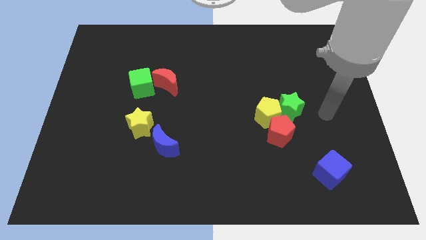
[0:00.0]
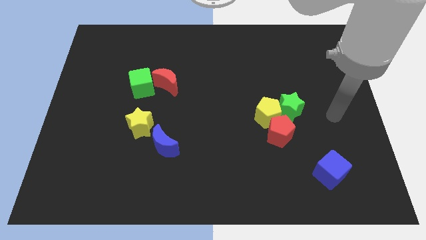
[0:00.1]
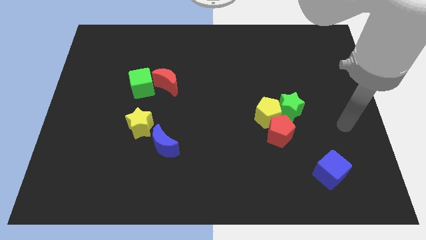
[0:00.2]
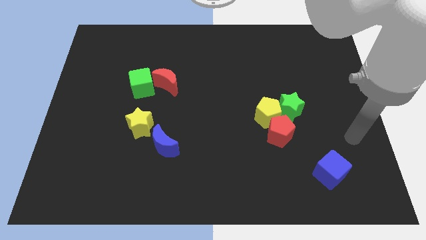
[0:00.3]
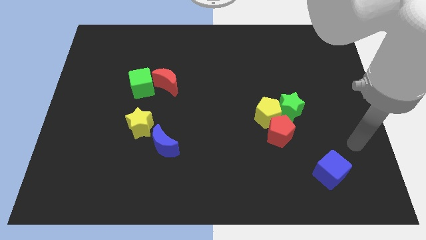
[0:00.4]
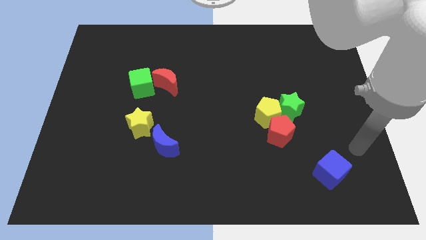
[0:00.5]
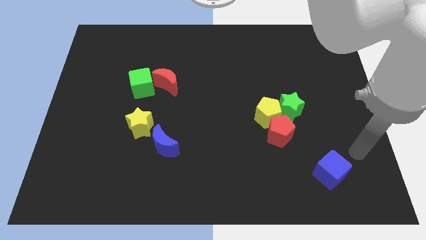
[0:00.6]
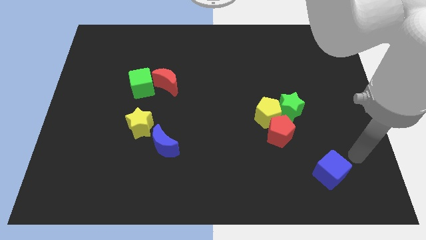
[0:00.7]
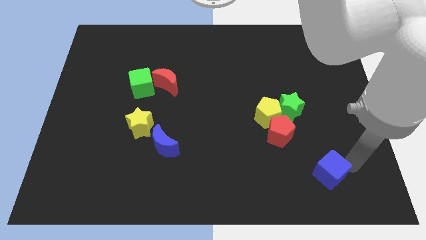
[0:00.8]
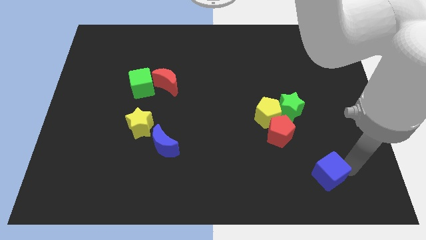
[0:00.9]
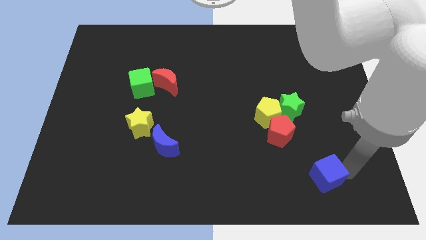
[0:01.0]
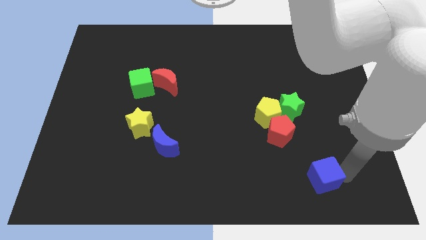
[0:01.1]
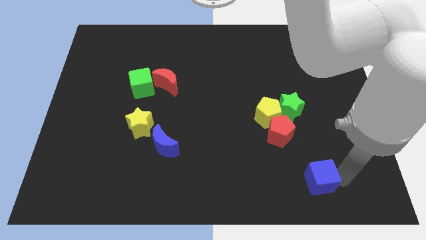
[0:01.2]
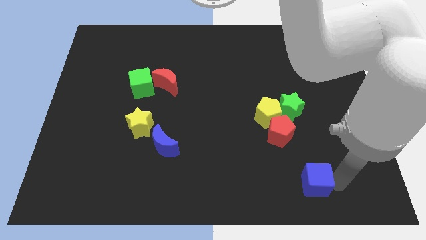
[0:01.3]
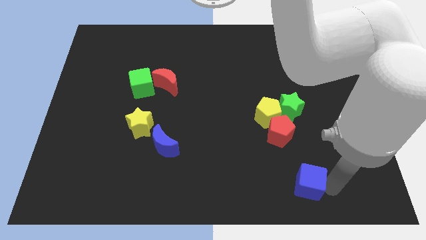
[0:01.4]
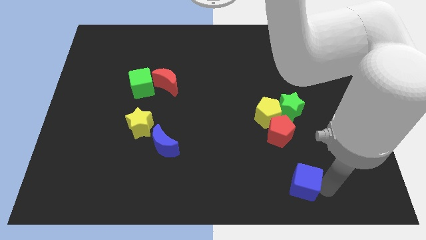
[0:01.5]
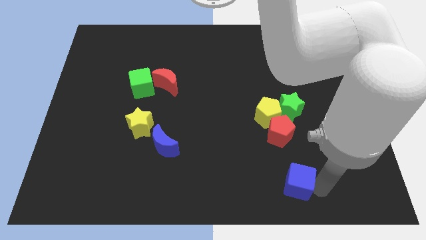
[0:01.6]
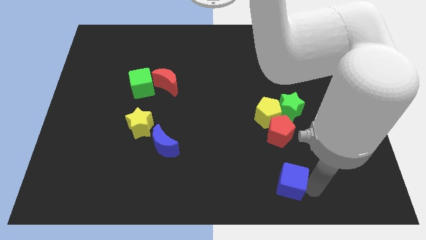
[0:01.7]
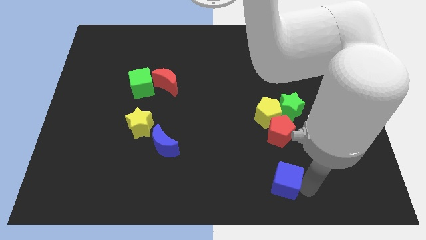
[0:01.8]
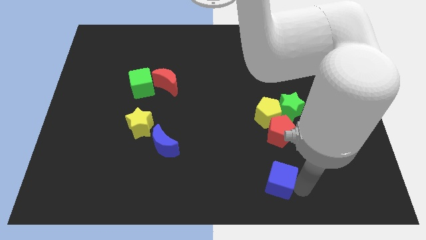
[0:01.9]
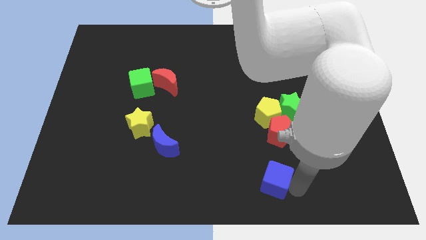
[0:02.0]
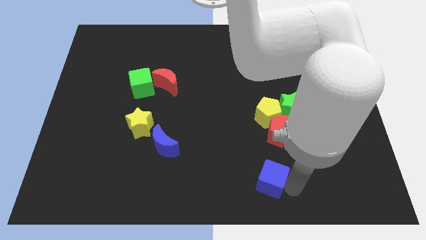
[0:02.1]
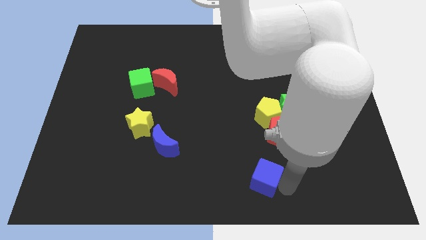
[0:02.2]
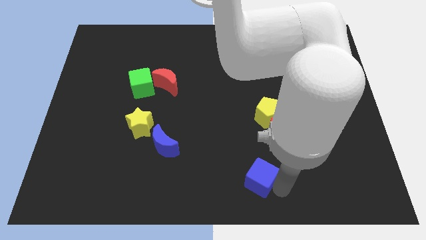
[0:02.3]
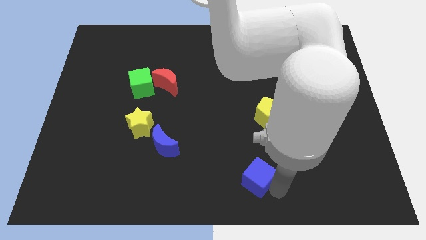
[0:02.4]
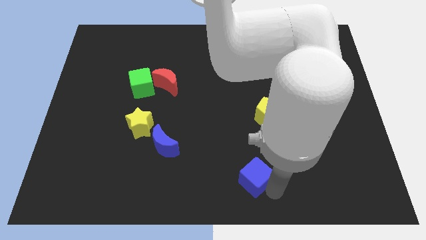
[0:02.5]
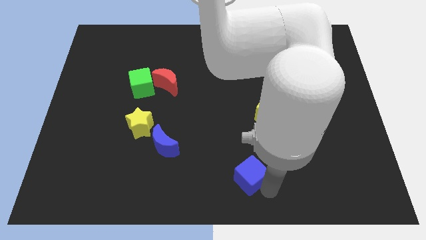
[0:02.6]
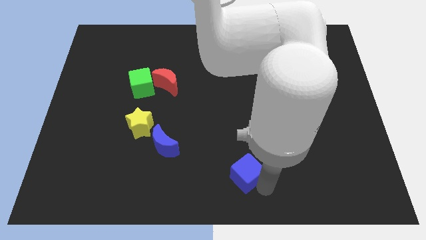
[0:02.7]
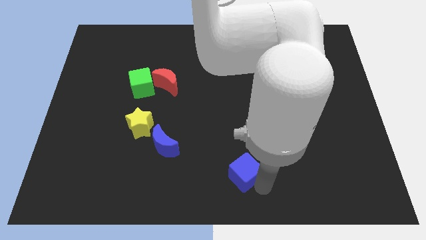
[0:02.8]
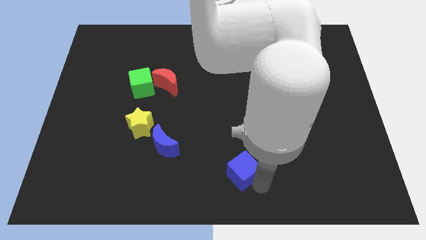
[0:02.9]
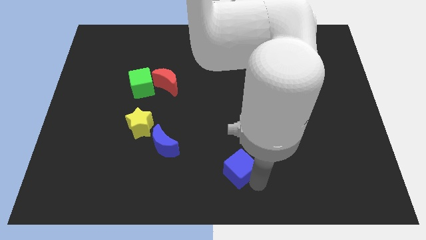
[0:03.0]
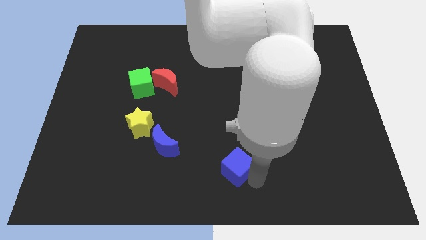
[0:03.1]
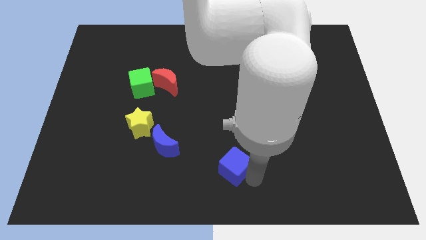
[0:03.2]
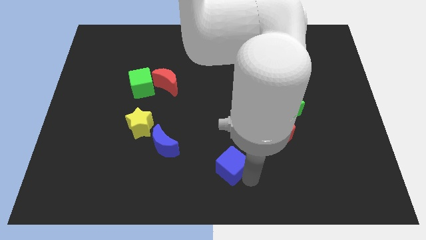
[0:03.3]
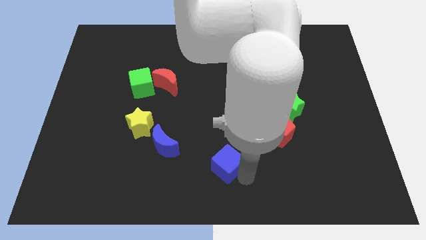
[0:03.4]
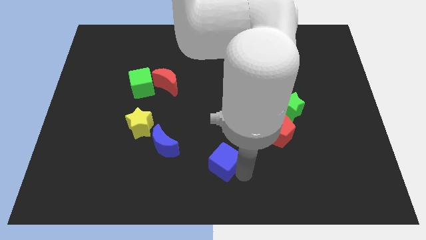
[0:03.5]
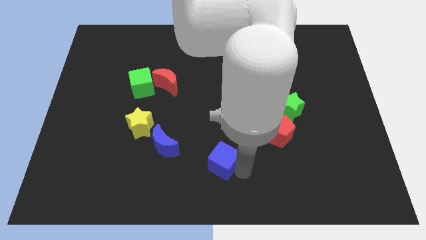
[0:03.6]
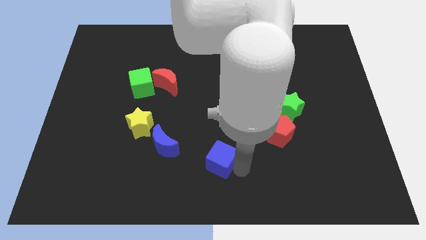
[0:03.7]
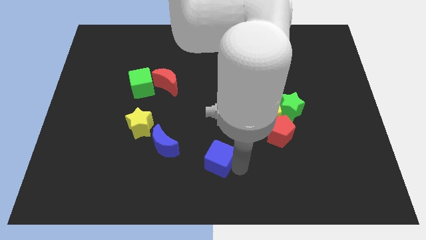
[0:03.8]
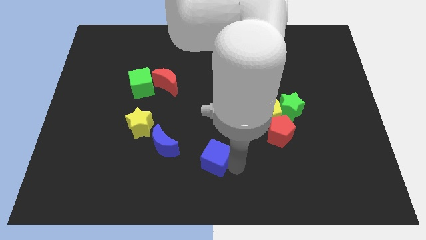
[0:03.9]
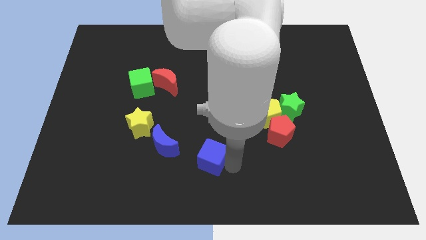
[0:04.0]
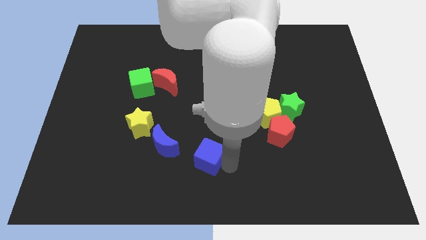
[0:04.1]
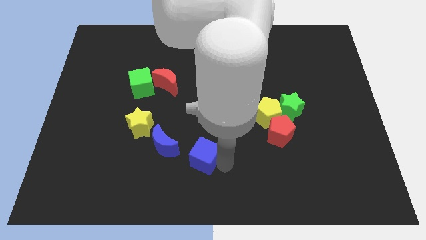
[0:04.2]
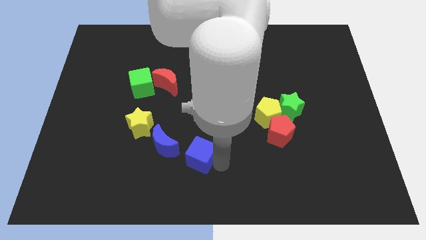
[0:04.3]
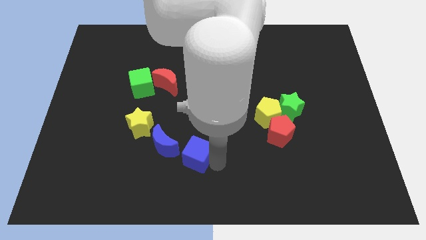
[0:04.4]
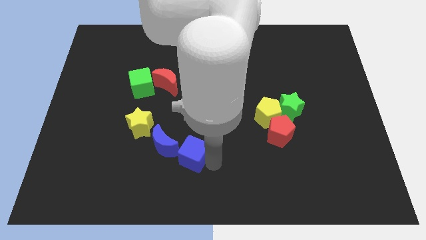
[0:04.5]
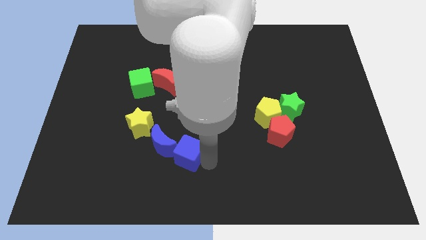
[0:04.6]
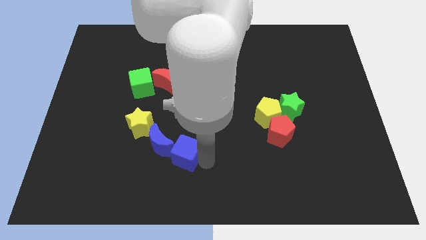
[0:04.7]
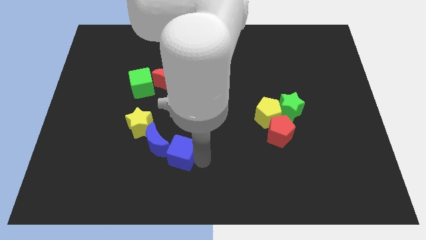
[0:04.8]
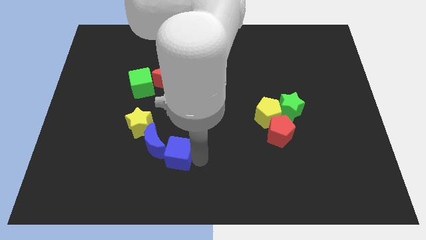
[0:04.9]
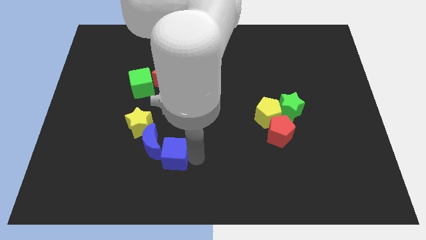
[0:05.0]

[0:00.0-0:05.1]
slide the blue cube close to the blue moon

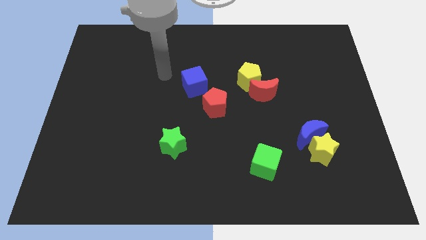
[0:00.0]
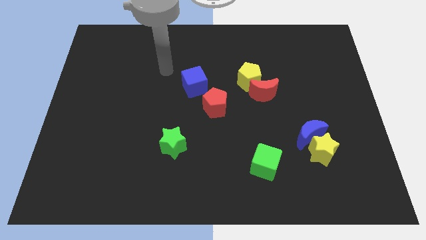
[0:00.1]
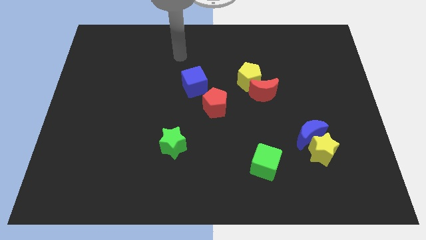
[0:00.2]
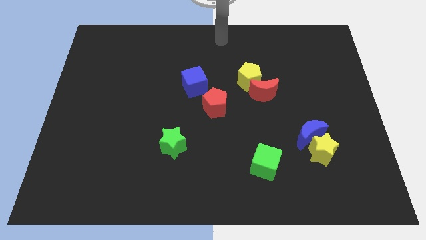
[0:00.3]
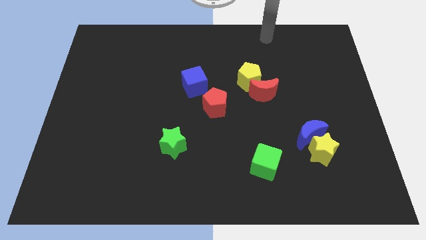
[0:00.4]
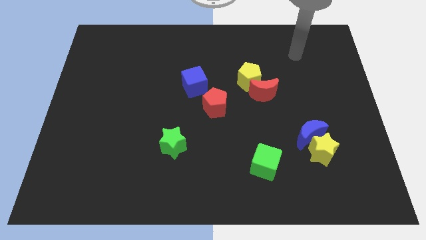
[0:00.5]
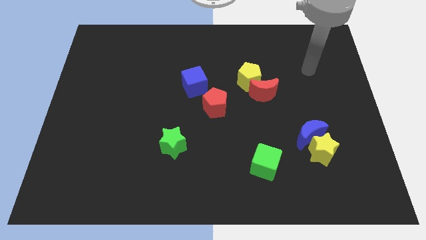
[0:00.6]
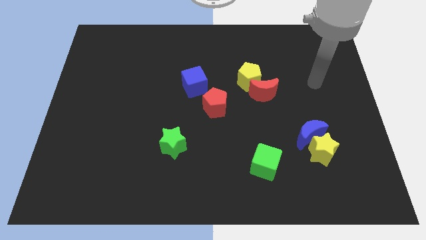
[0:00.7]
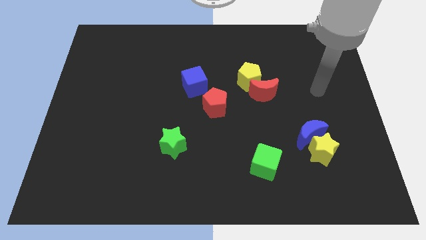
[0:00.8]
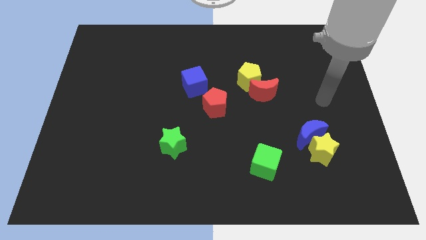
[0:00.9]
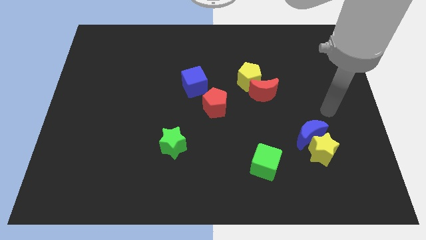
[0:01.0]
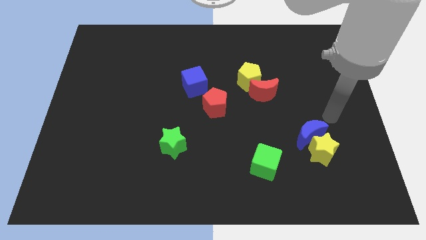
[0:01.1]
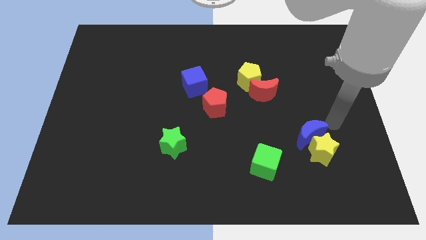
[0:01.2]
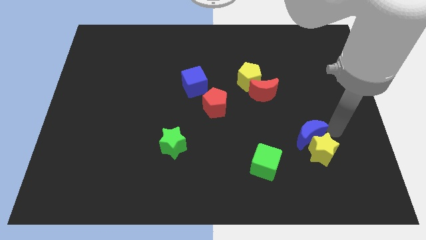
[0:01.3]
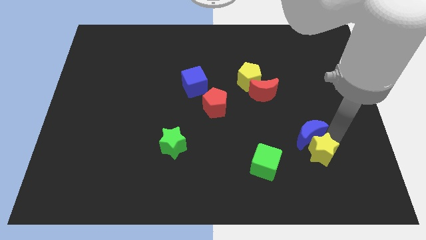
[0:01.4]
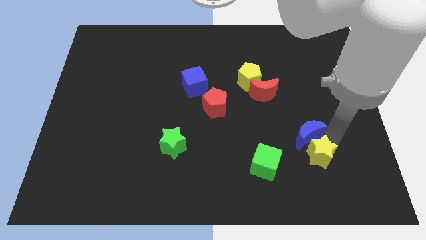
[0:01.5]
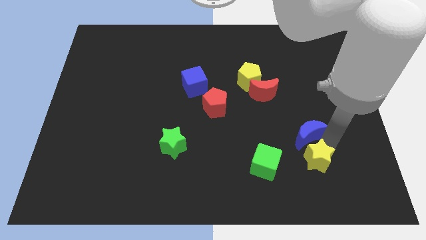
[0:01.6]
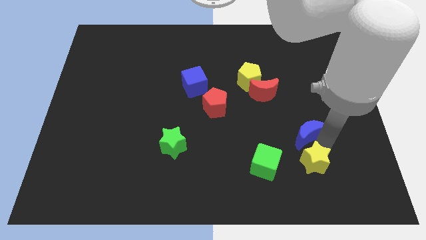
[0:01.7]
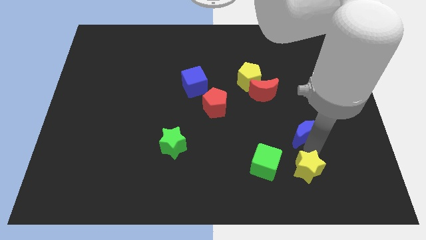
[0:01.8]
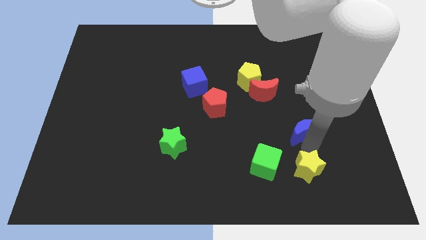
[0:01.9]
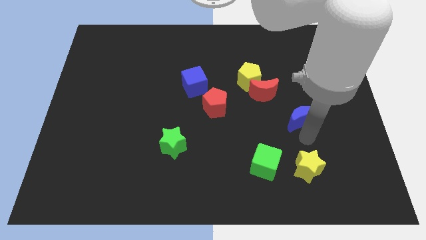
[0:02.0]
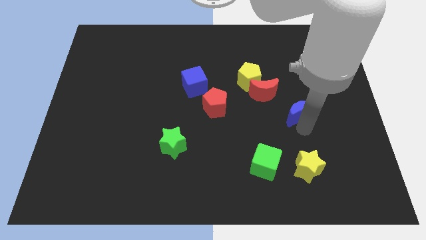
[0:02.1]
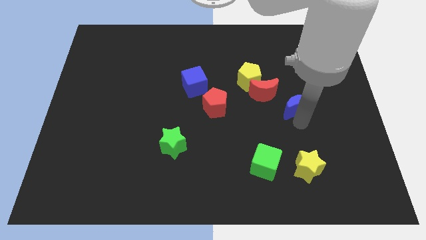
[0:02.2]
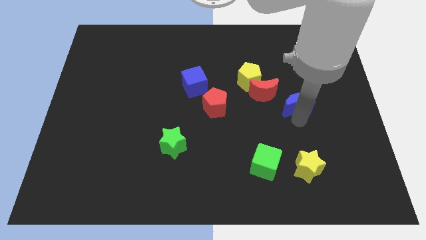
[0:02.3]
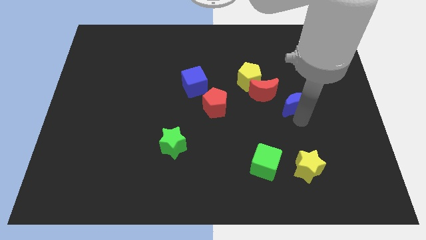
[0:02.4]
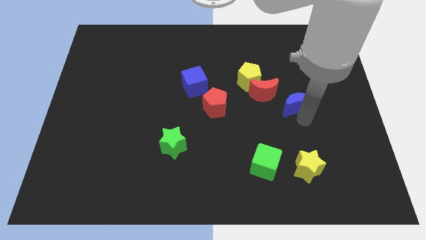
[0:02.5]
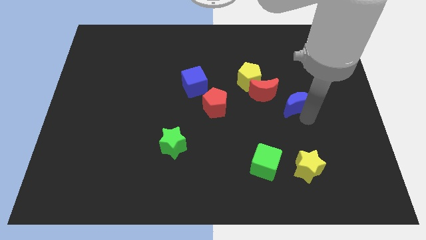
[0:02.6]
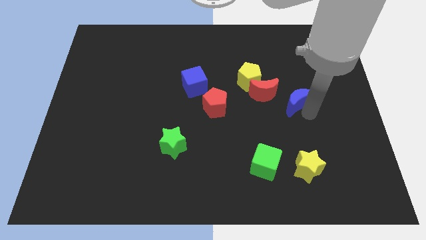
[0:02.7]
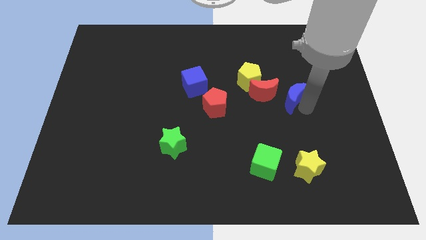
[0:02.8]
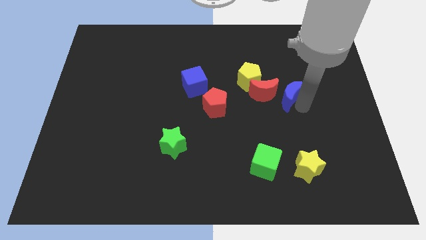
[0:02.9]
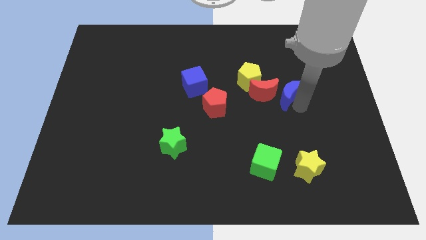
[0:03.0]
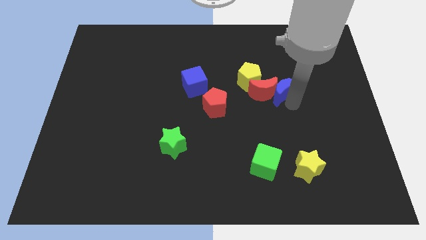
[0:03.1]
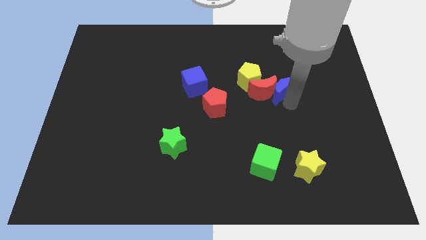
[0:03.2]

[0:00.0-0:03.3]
push the blue moon to the red moon

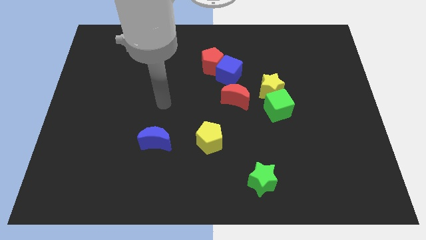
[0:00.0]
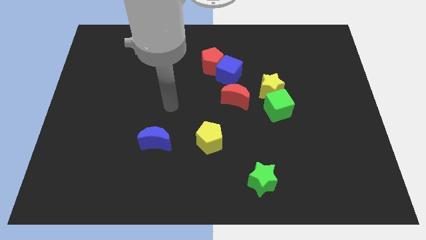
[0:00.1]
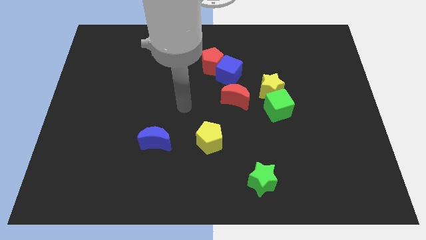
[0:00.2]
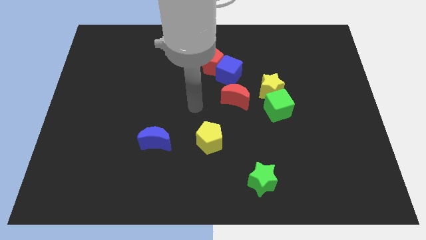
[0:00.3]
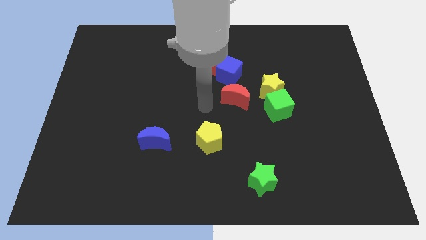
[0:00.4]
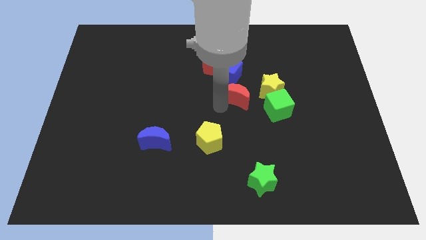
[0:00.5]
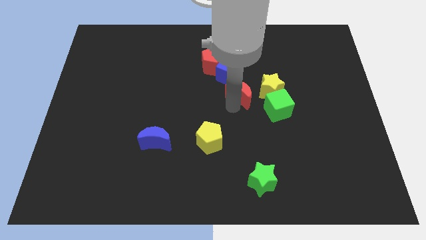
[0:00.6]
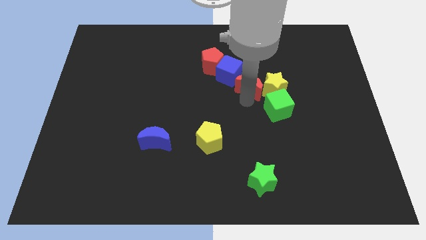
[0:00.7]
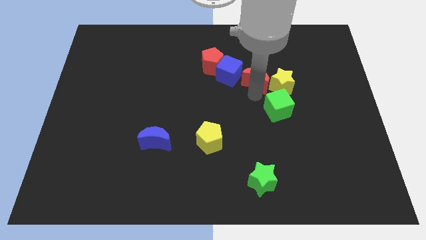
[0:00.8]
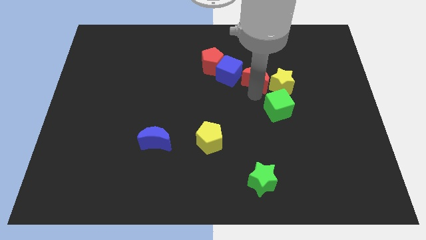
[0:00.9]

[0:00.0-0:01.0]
put the red moon next to the yellow star
